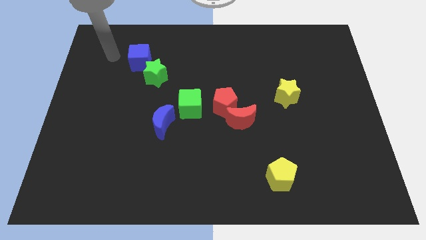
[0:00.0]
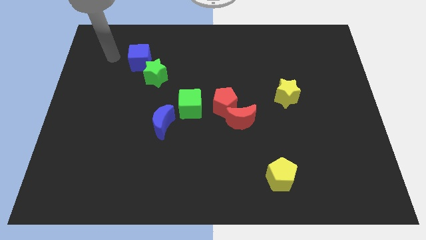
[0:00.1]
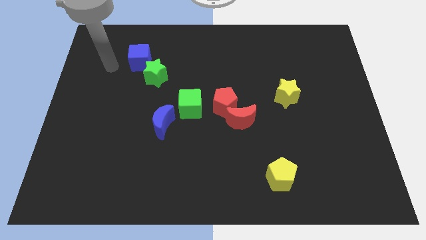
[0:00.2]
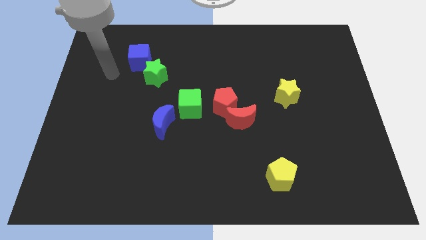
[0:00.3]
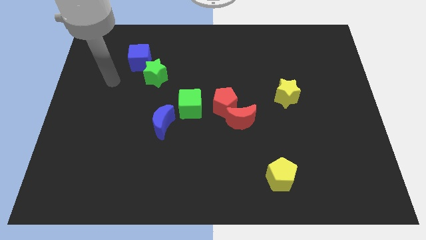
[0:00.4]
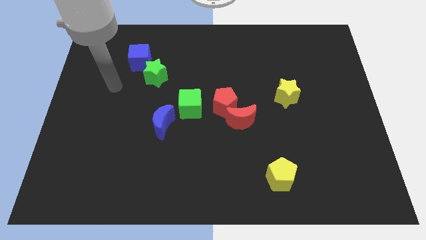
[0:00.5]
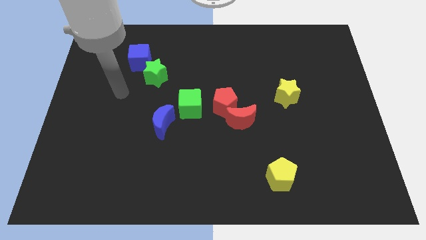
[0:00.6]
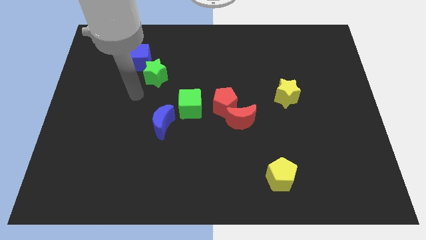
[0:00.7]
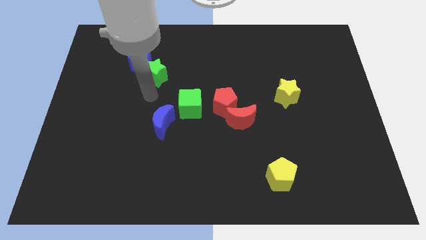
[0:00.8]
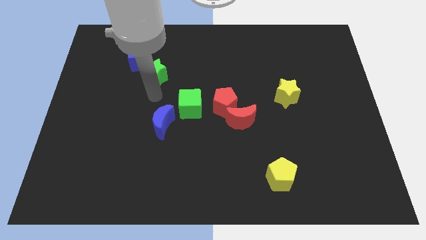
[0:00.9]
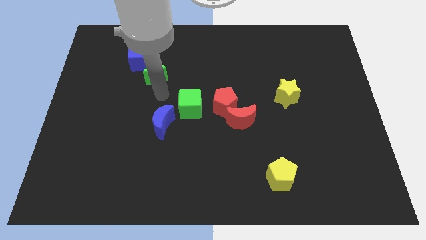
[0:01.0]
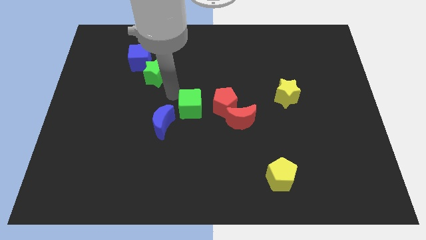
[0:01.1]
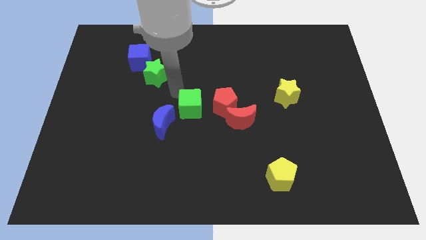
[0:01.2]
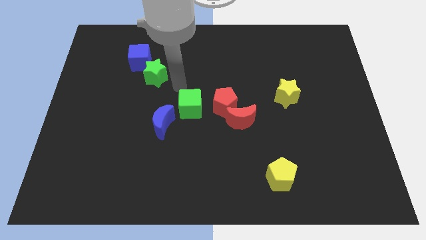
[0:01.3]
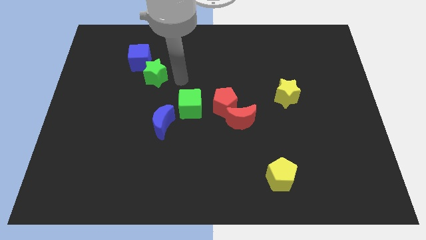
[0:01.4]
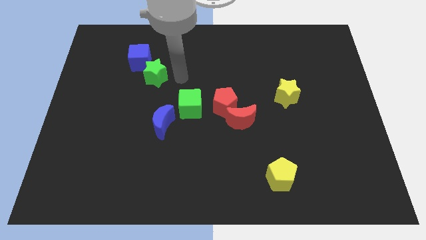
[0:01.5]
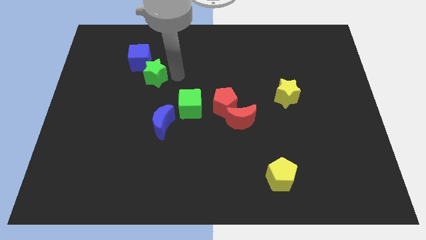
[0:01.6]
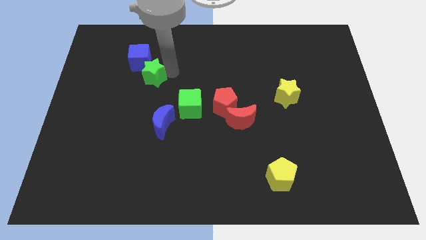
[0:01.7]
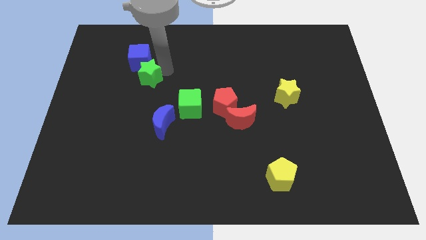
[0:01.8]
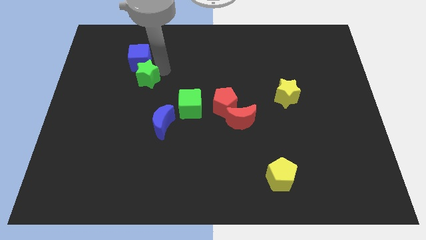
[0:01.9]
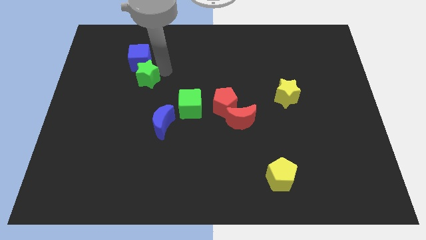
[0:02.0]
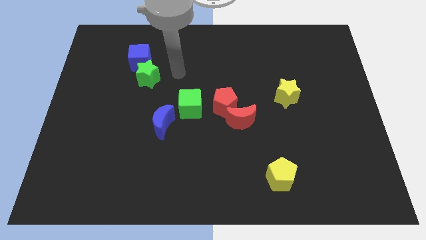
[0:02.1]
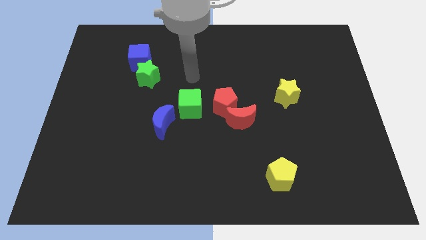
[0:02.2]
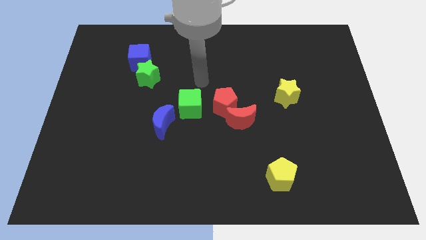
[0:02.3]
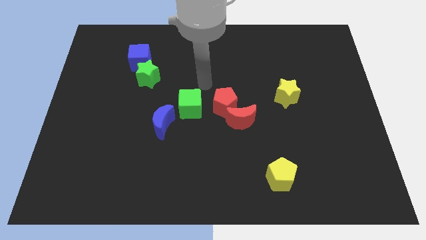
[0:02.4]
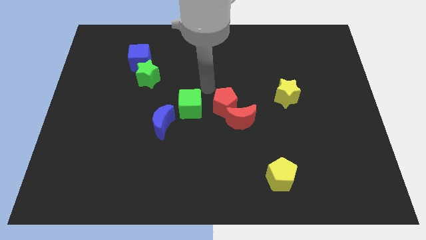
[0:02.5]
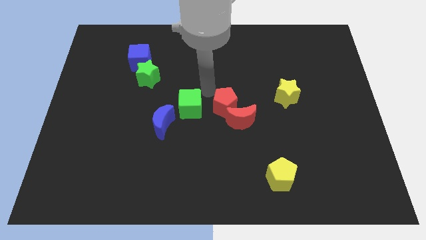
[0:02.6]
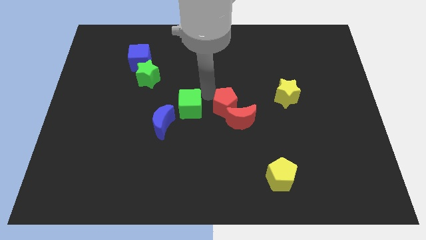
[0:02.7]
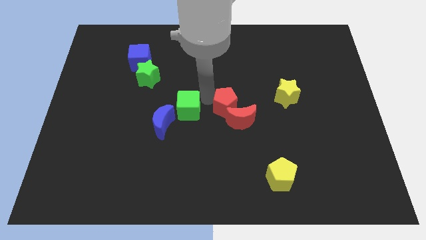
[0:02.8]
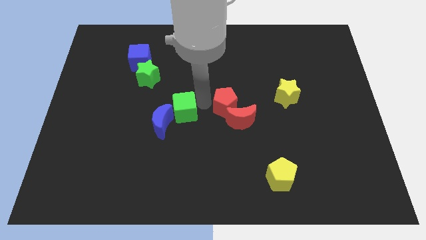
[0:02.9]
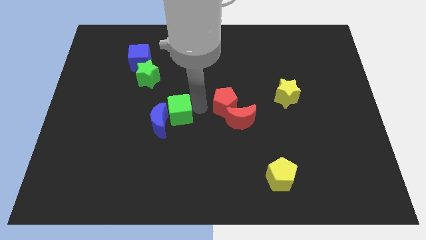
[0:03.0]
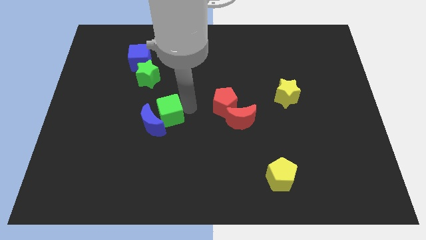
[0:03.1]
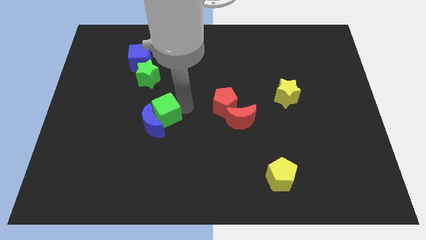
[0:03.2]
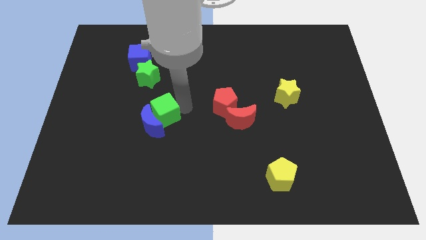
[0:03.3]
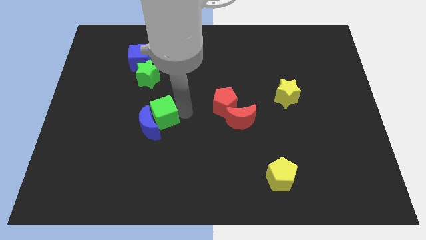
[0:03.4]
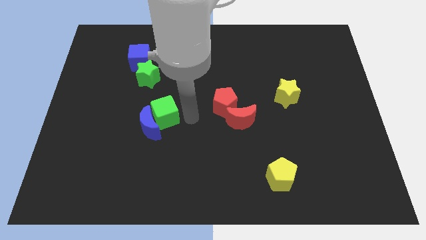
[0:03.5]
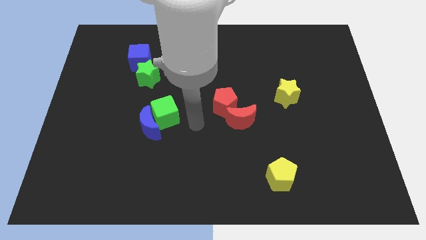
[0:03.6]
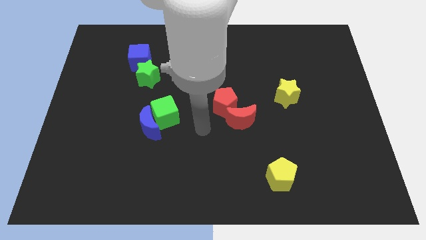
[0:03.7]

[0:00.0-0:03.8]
move green star green cube and blue crescent slightly to the left

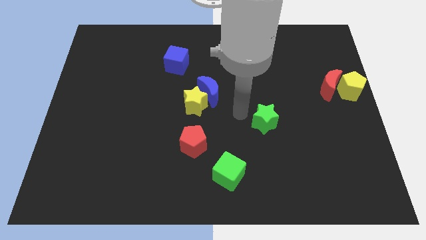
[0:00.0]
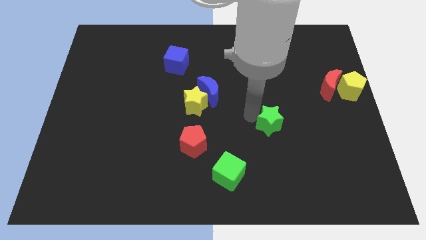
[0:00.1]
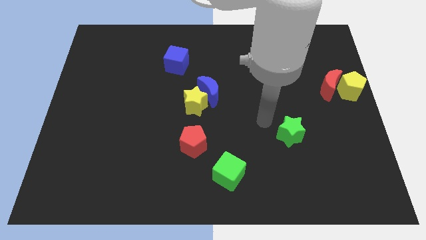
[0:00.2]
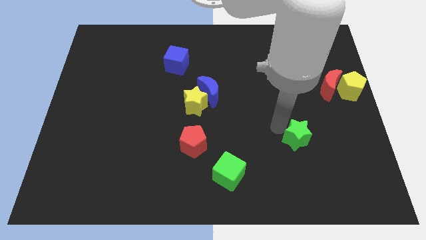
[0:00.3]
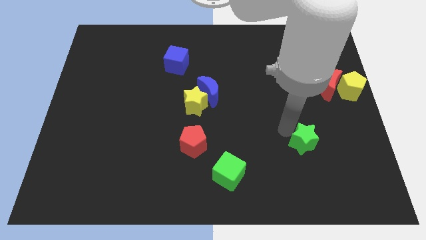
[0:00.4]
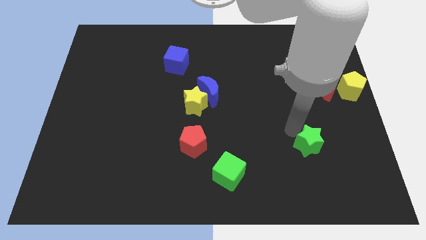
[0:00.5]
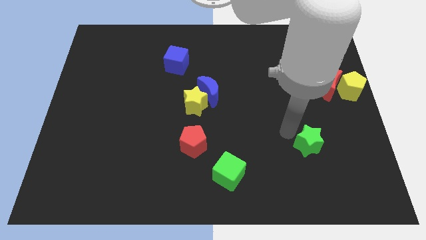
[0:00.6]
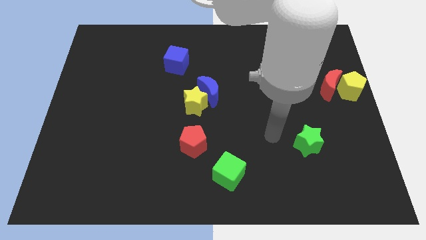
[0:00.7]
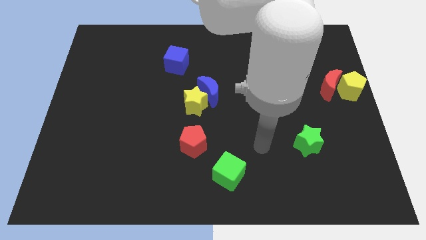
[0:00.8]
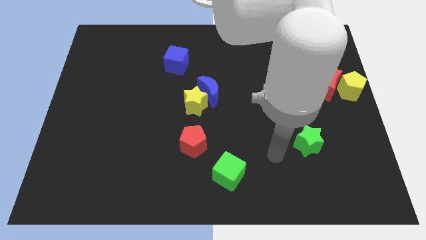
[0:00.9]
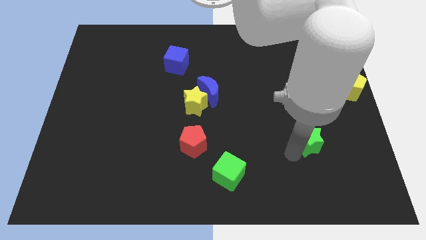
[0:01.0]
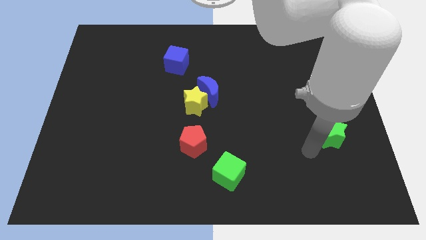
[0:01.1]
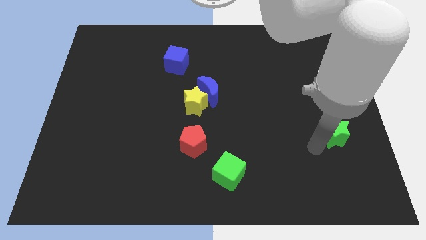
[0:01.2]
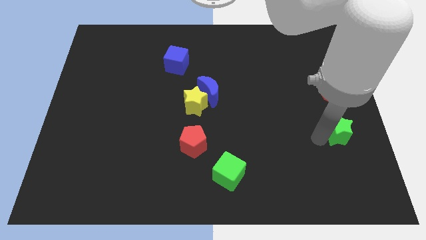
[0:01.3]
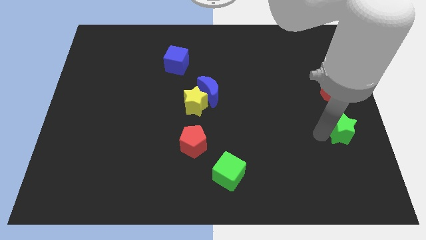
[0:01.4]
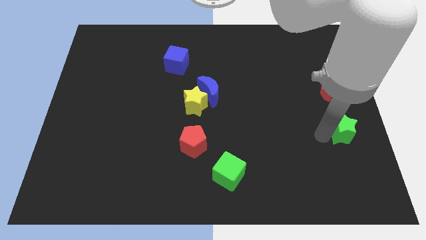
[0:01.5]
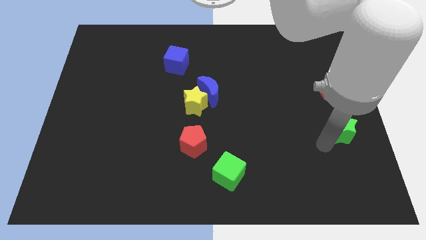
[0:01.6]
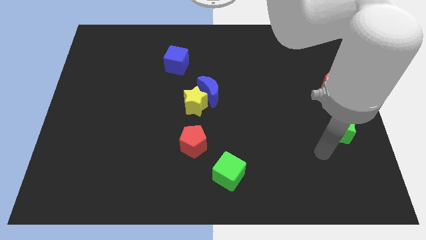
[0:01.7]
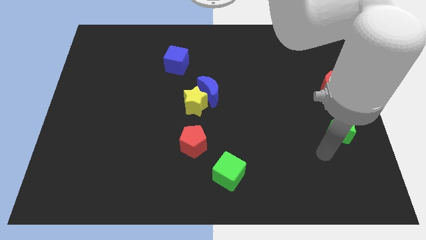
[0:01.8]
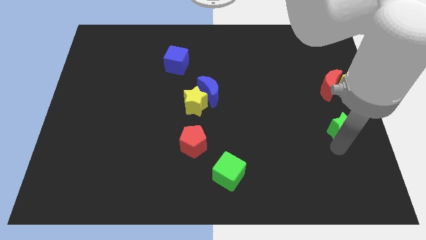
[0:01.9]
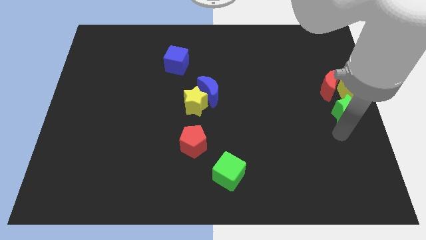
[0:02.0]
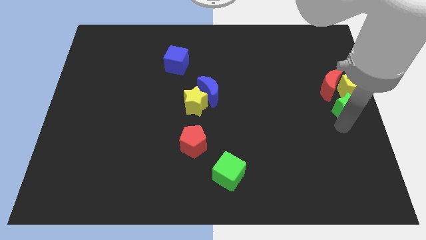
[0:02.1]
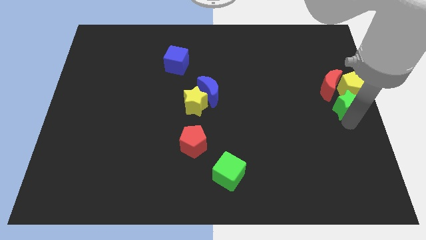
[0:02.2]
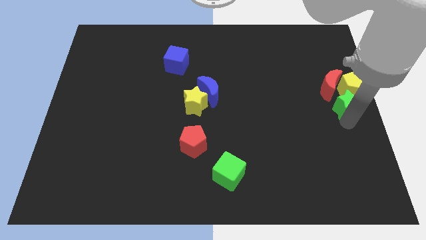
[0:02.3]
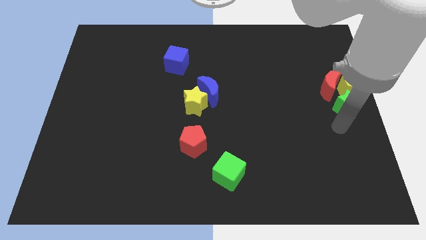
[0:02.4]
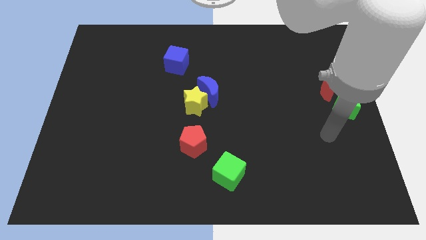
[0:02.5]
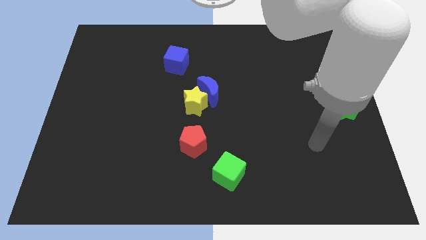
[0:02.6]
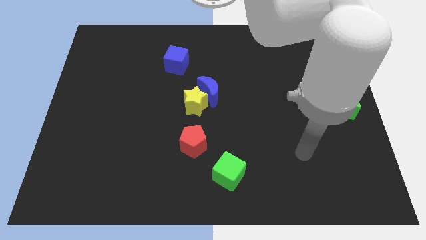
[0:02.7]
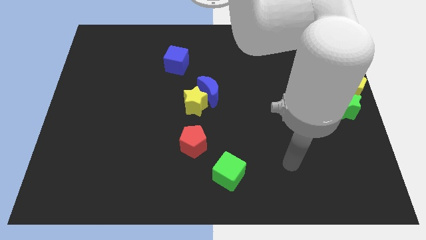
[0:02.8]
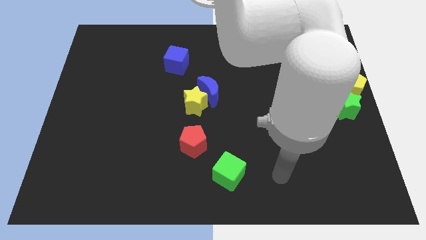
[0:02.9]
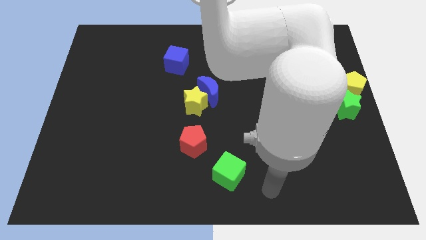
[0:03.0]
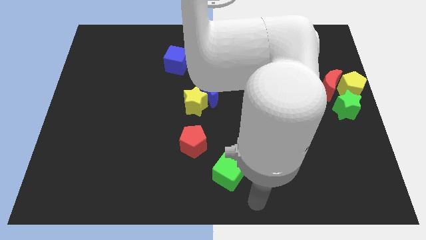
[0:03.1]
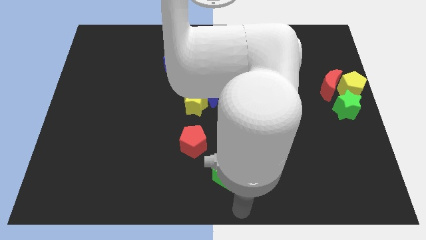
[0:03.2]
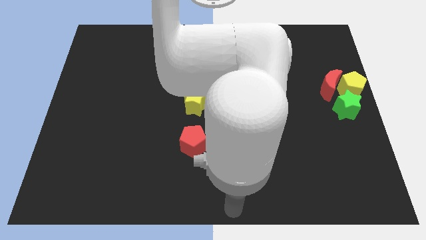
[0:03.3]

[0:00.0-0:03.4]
place the green star under the yellow pentagon

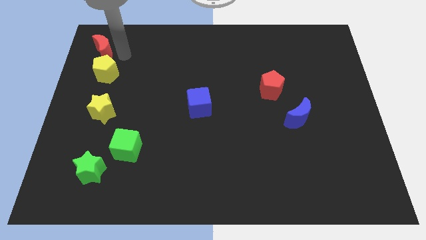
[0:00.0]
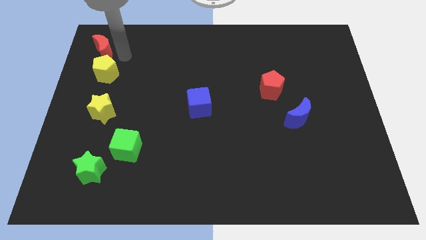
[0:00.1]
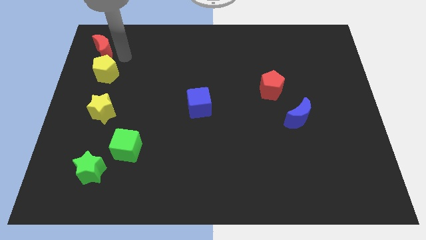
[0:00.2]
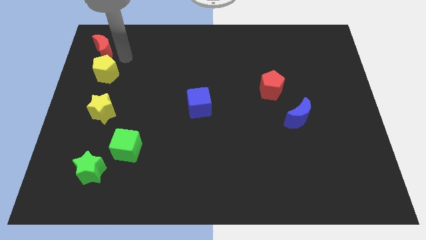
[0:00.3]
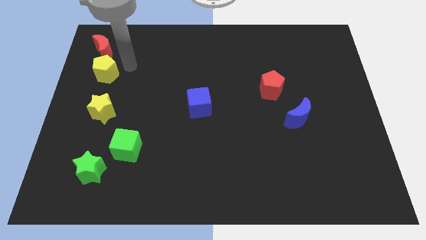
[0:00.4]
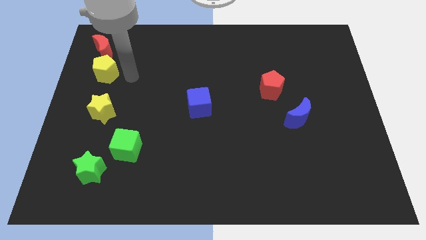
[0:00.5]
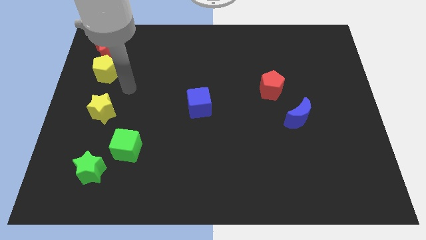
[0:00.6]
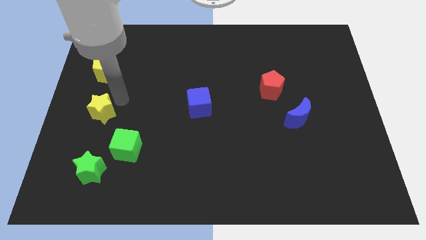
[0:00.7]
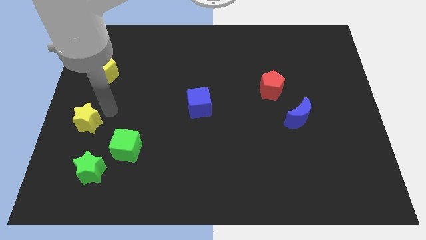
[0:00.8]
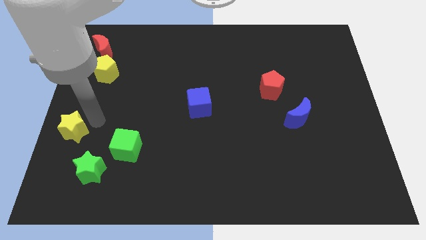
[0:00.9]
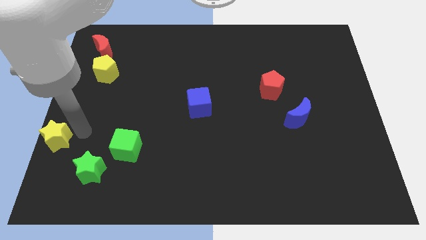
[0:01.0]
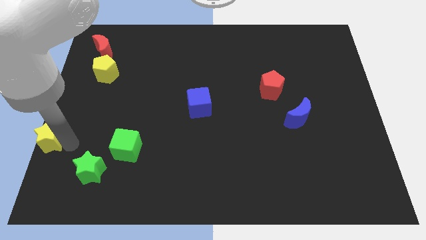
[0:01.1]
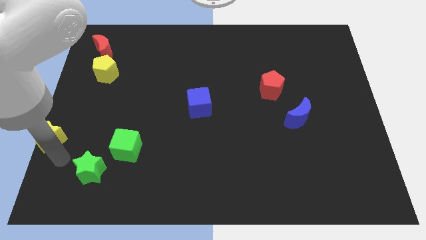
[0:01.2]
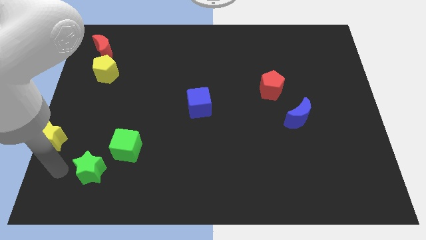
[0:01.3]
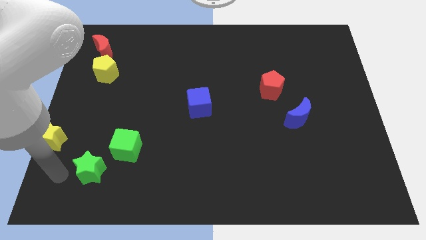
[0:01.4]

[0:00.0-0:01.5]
move the yellow star to the left of the green cube

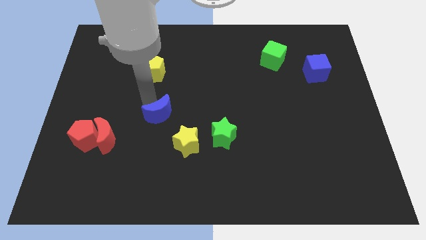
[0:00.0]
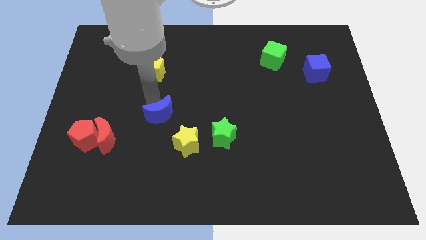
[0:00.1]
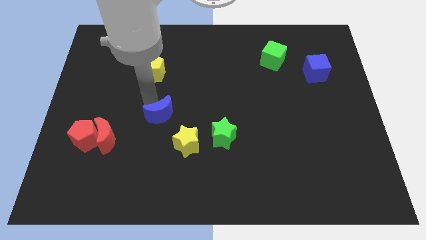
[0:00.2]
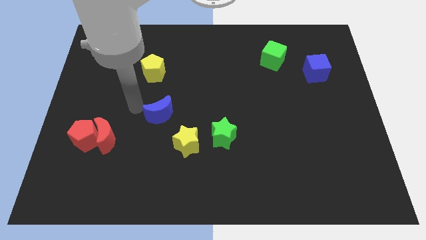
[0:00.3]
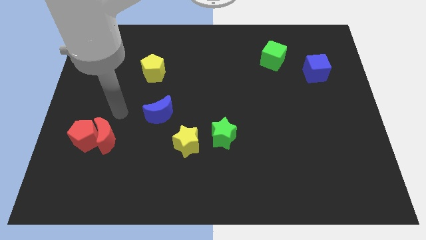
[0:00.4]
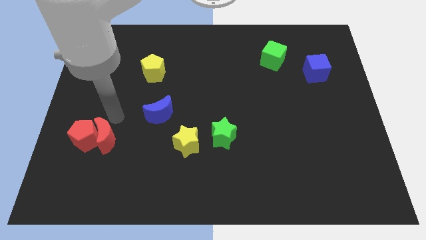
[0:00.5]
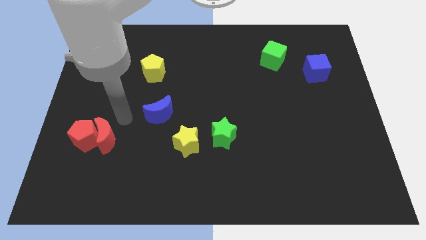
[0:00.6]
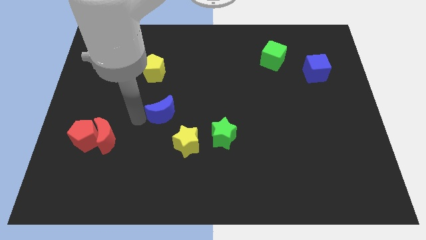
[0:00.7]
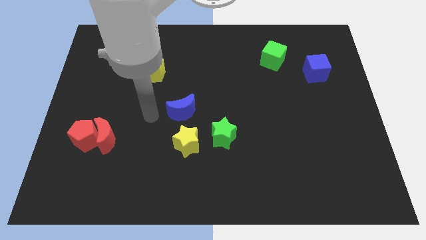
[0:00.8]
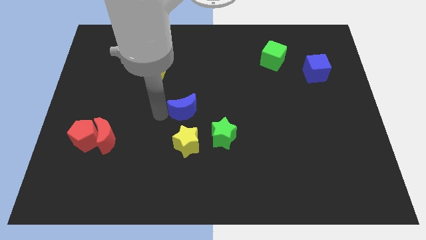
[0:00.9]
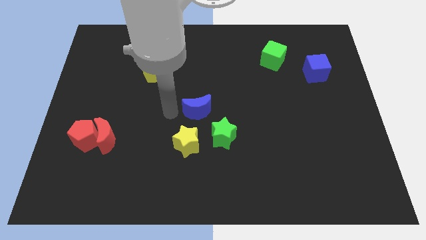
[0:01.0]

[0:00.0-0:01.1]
move blue moon center to the board
